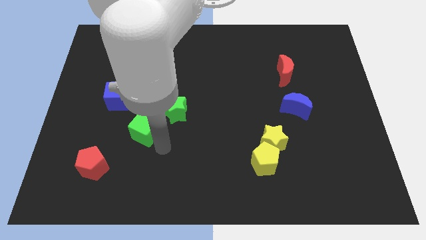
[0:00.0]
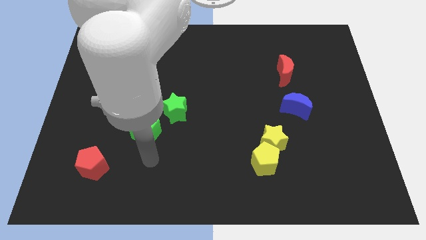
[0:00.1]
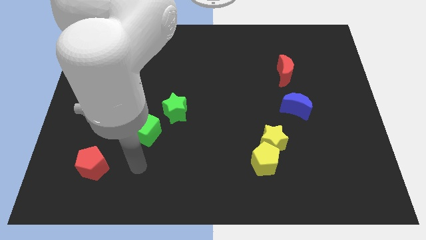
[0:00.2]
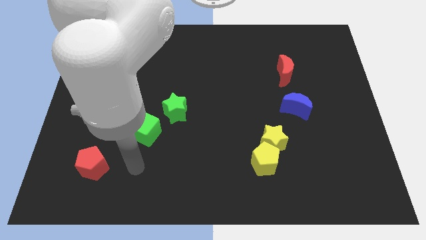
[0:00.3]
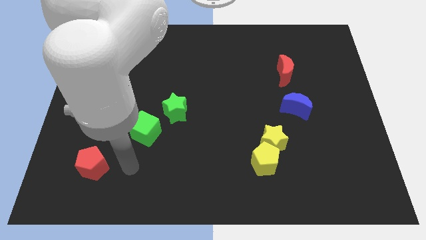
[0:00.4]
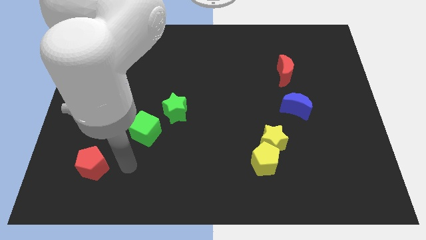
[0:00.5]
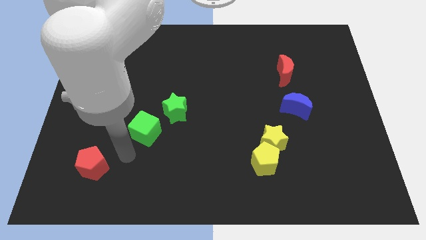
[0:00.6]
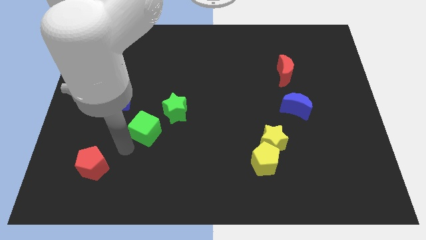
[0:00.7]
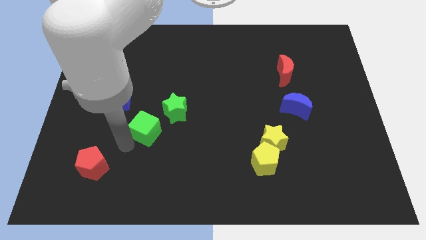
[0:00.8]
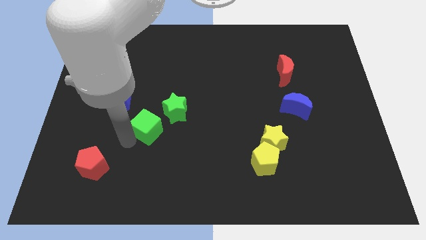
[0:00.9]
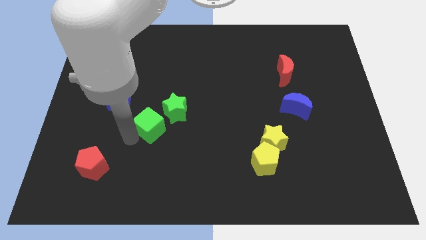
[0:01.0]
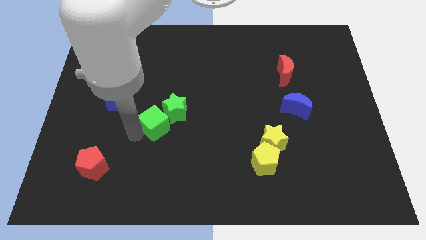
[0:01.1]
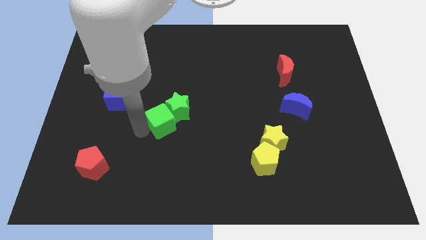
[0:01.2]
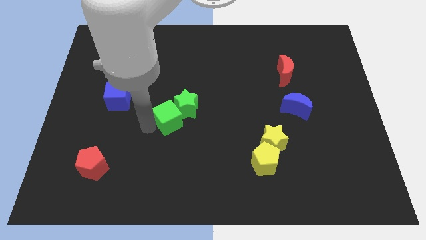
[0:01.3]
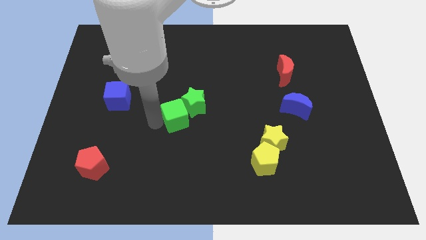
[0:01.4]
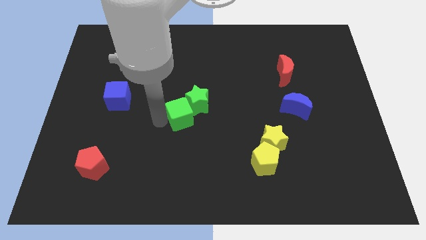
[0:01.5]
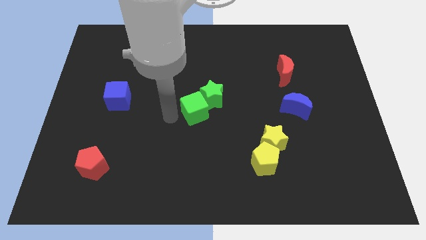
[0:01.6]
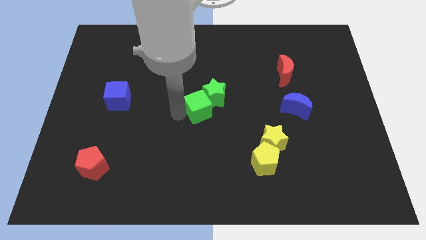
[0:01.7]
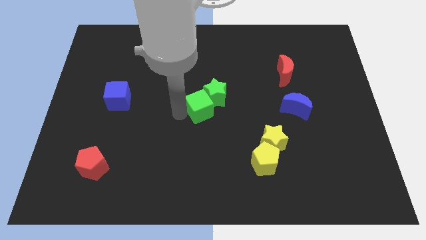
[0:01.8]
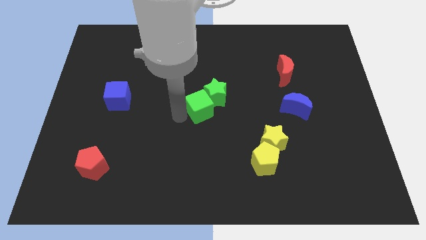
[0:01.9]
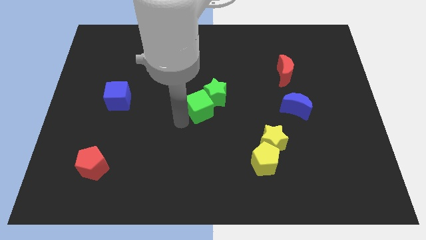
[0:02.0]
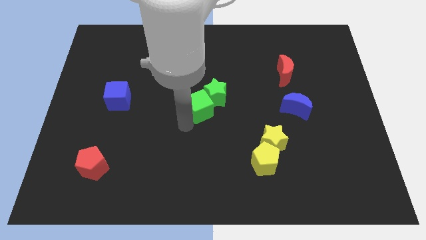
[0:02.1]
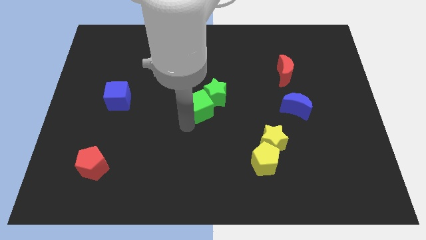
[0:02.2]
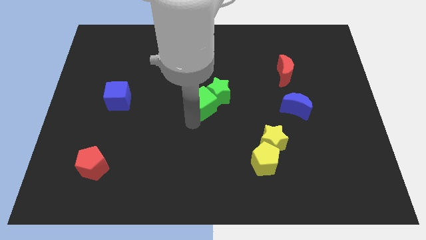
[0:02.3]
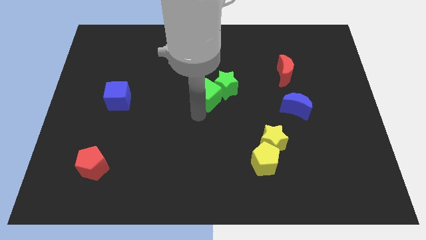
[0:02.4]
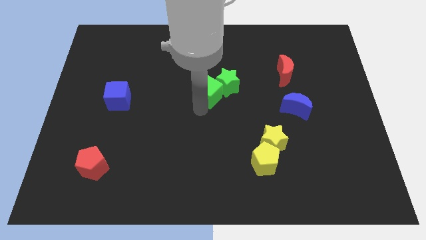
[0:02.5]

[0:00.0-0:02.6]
push green cube in to green star

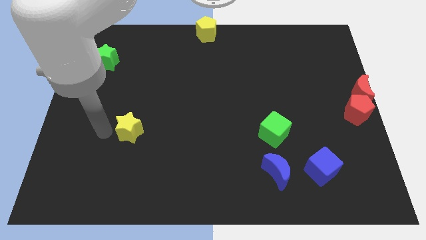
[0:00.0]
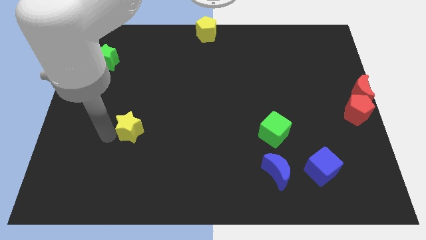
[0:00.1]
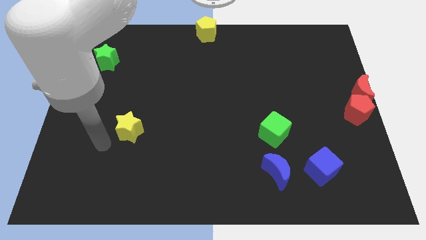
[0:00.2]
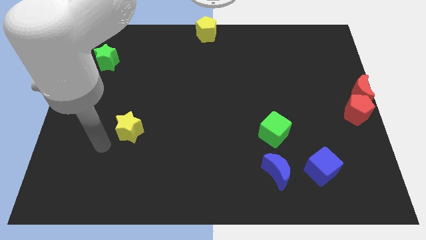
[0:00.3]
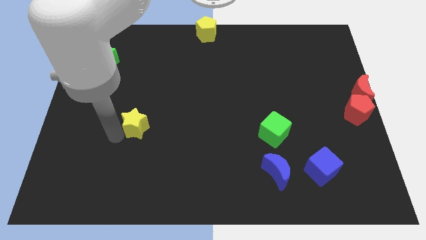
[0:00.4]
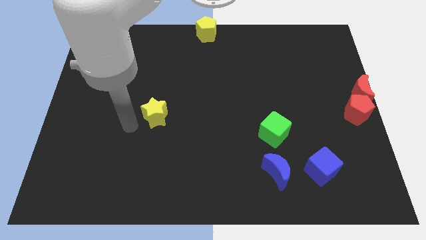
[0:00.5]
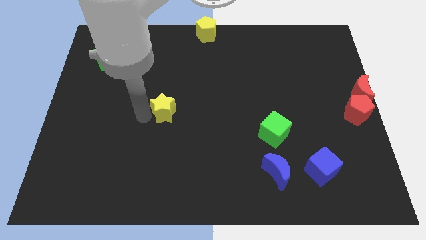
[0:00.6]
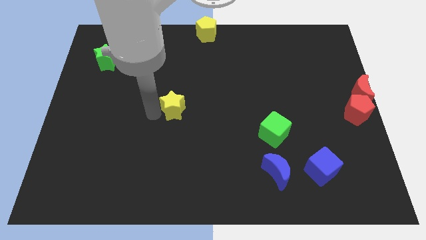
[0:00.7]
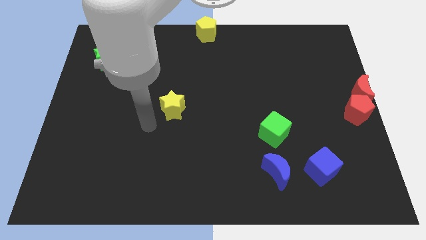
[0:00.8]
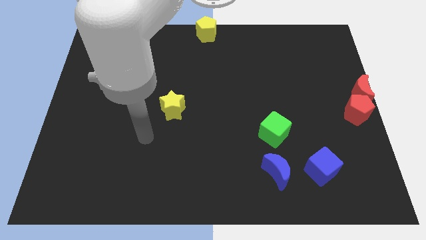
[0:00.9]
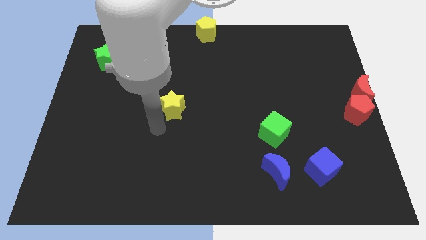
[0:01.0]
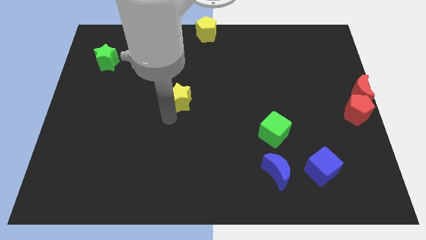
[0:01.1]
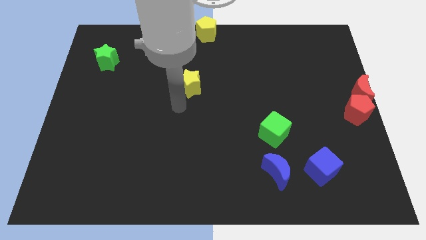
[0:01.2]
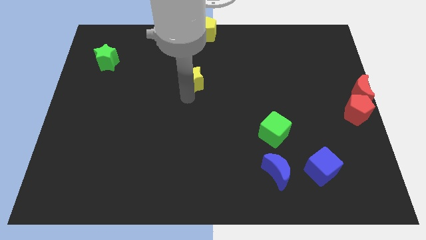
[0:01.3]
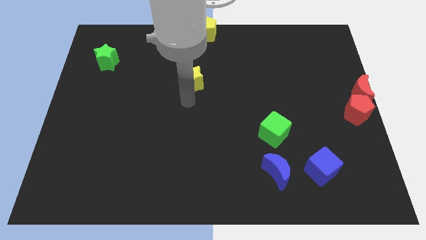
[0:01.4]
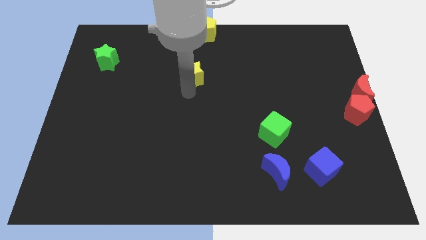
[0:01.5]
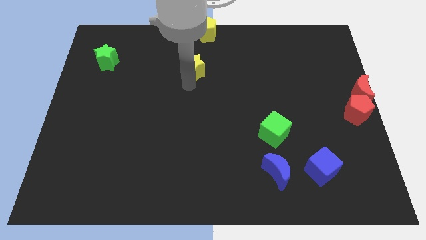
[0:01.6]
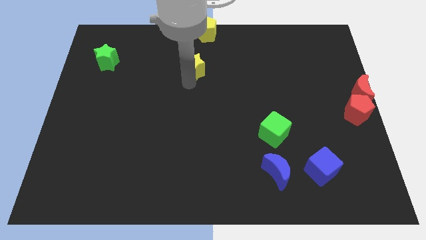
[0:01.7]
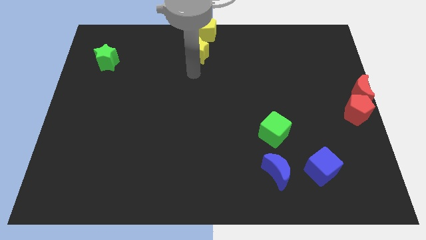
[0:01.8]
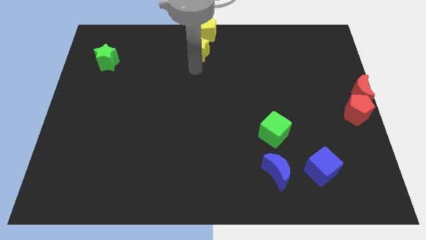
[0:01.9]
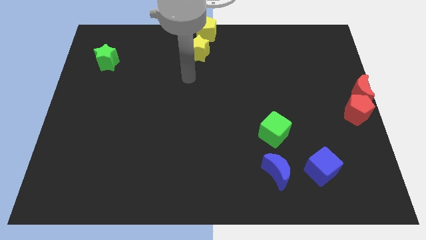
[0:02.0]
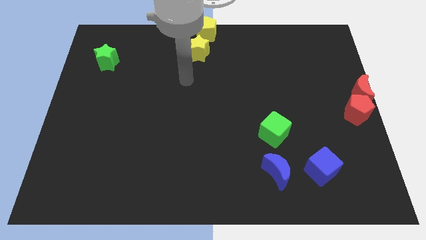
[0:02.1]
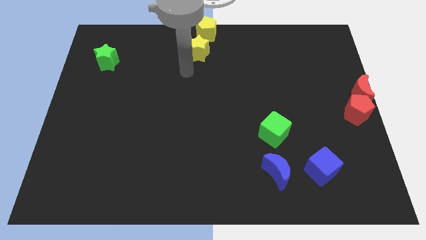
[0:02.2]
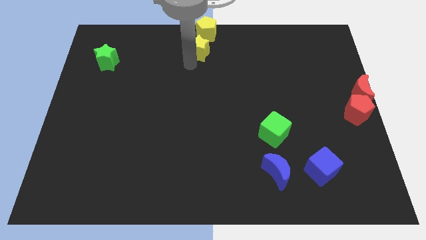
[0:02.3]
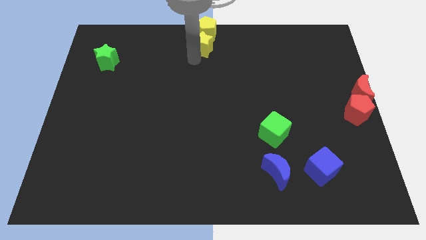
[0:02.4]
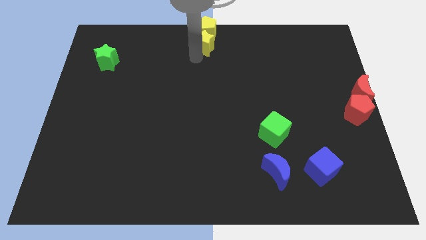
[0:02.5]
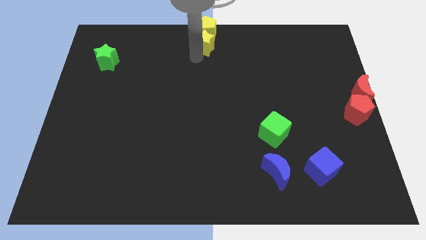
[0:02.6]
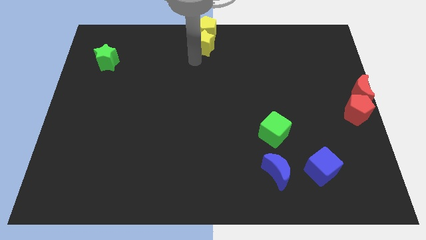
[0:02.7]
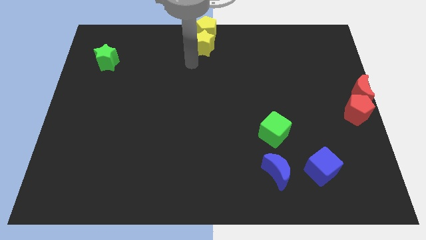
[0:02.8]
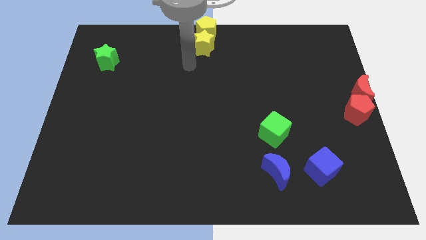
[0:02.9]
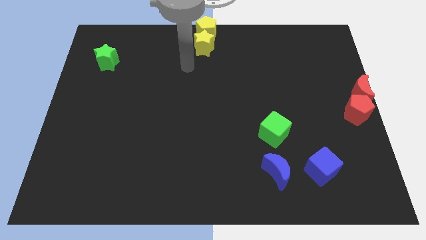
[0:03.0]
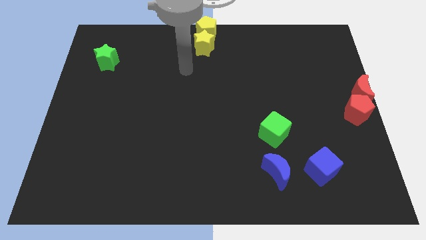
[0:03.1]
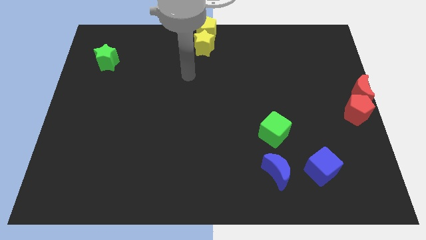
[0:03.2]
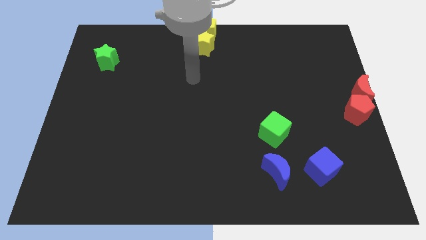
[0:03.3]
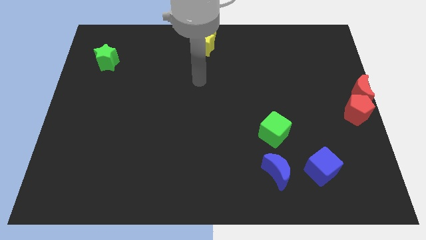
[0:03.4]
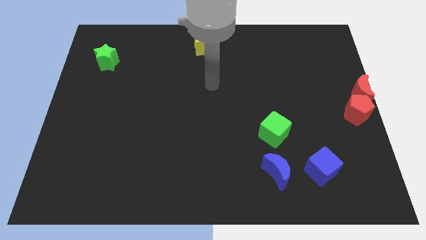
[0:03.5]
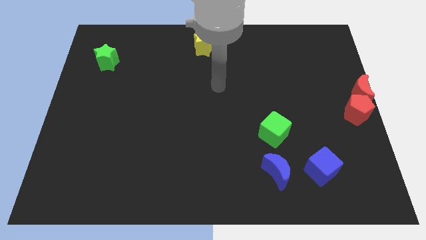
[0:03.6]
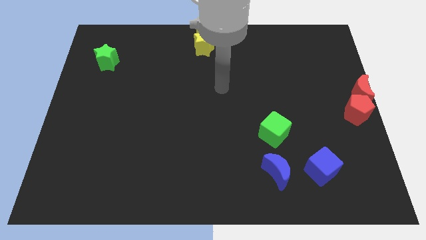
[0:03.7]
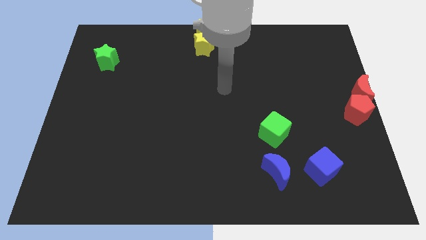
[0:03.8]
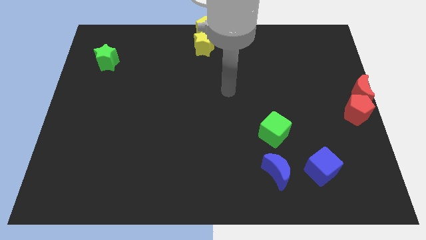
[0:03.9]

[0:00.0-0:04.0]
put the yellow star at the bottom of the yellow pentagon

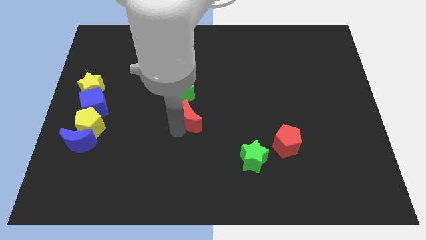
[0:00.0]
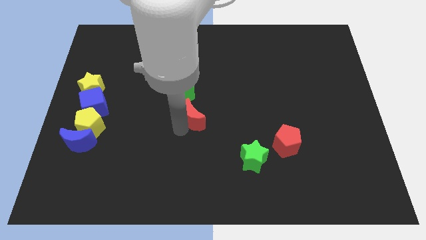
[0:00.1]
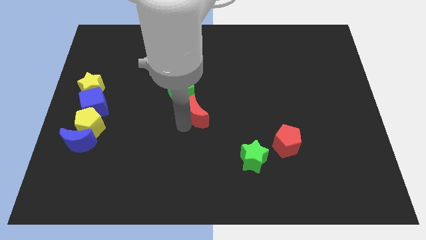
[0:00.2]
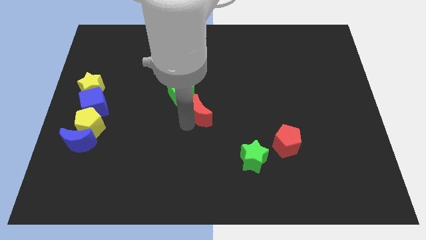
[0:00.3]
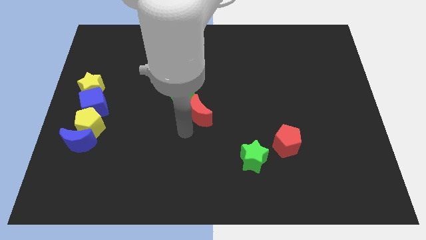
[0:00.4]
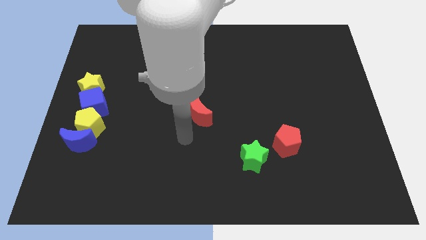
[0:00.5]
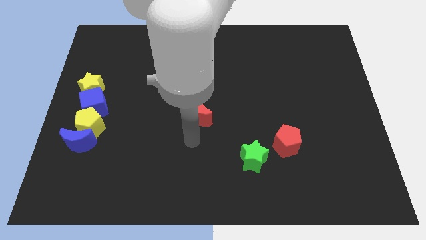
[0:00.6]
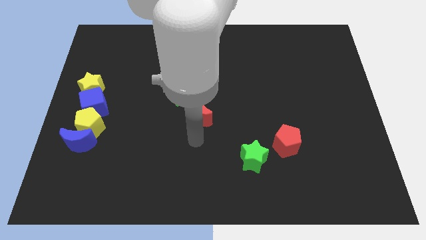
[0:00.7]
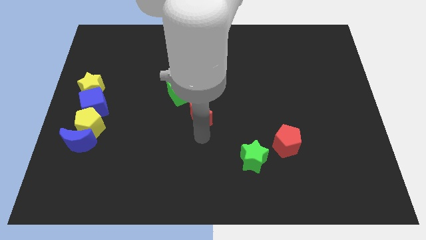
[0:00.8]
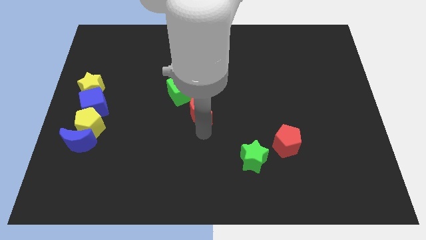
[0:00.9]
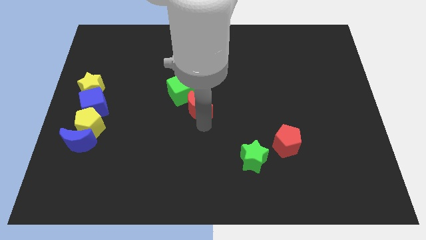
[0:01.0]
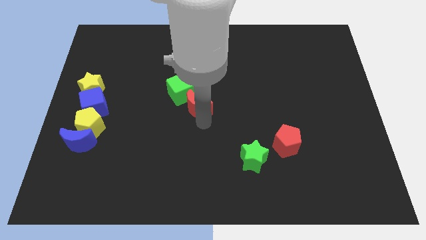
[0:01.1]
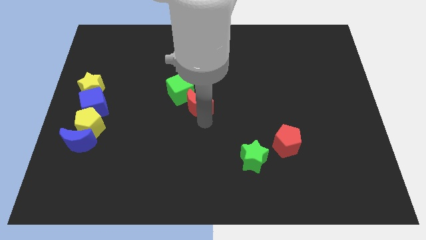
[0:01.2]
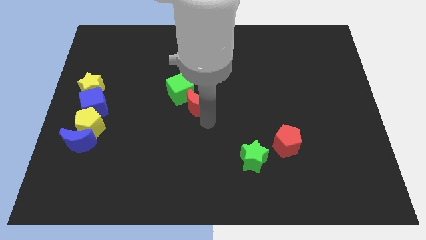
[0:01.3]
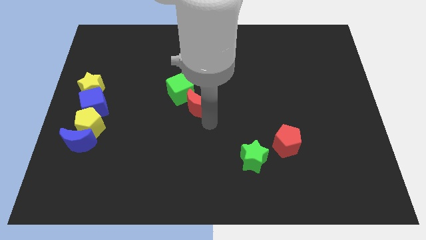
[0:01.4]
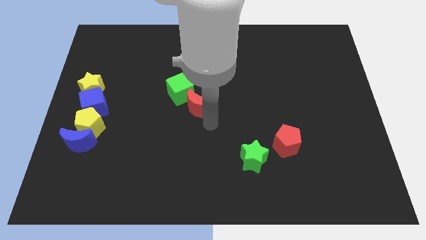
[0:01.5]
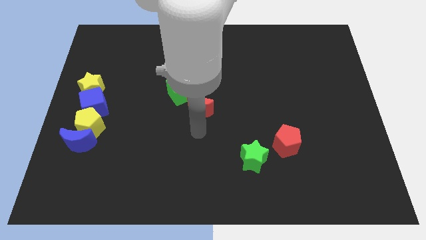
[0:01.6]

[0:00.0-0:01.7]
slide the red crescent to the bottom right side of the green cube

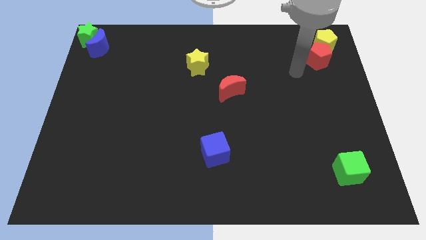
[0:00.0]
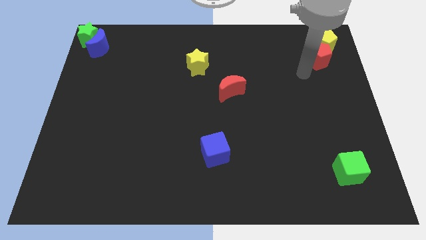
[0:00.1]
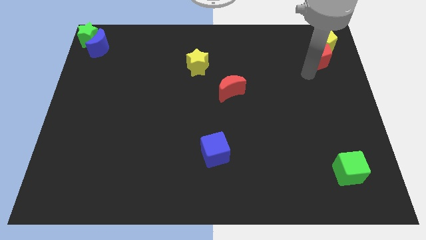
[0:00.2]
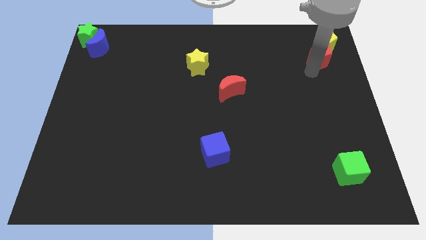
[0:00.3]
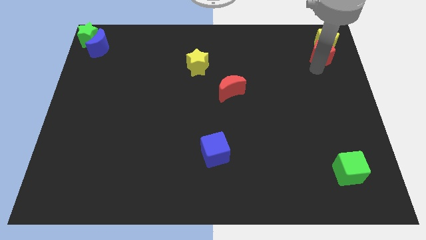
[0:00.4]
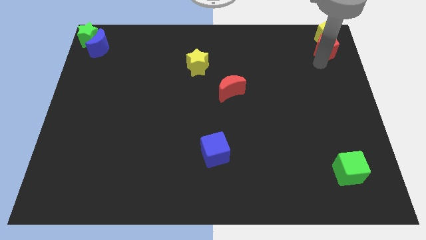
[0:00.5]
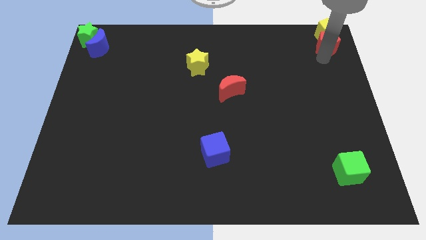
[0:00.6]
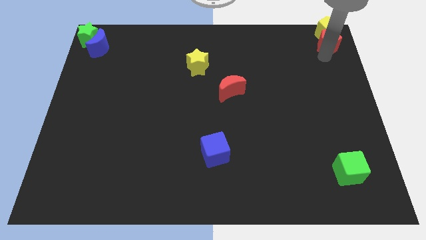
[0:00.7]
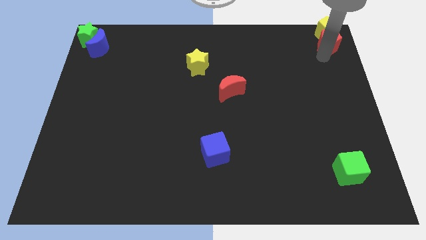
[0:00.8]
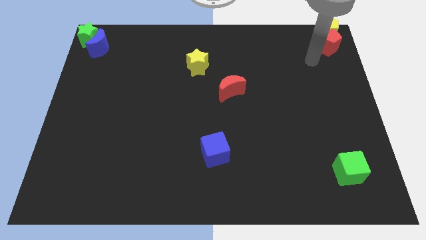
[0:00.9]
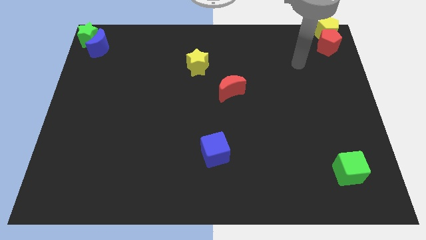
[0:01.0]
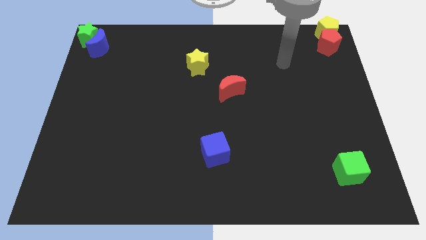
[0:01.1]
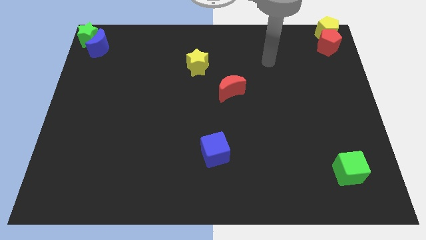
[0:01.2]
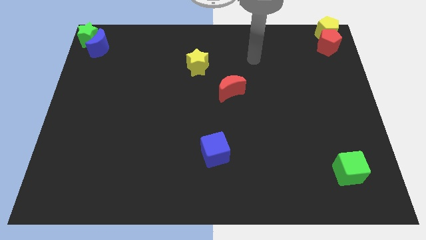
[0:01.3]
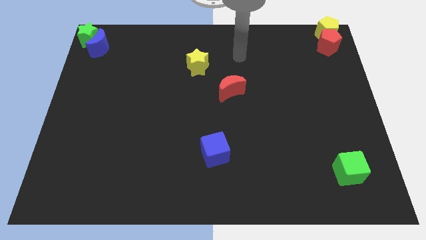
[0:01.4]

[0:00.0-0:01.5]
place the yellow pentagon along with red pentagon to the top right corner
